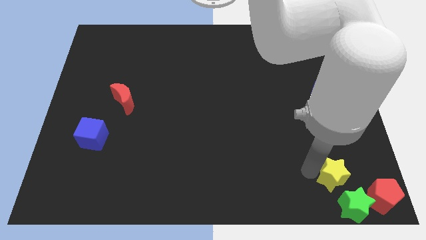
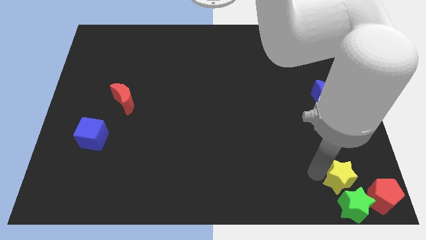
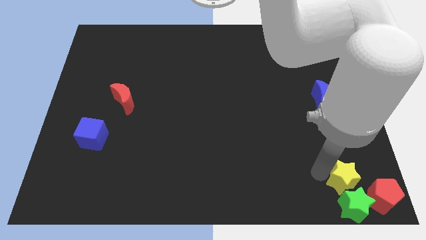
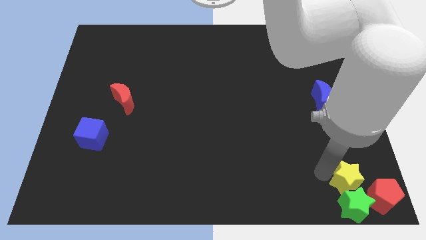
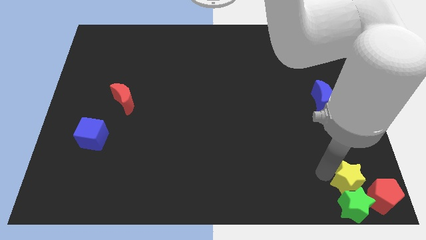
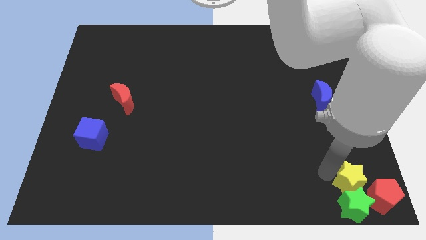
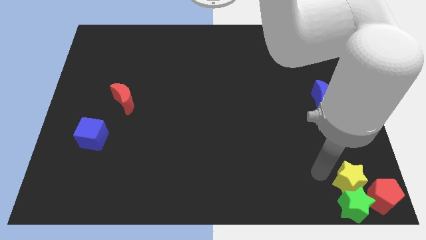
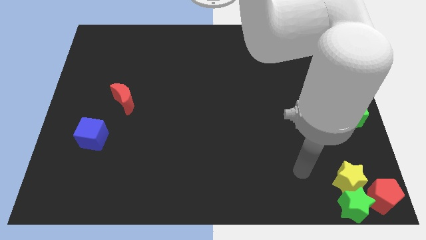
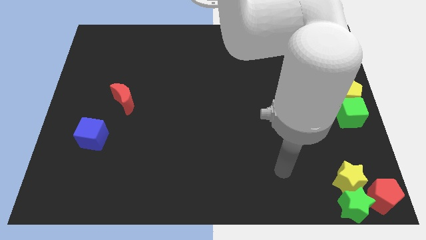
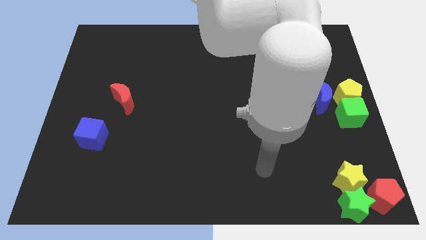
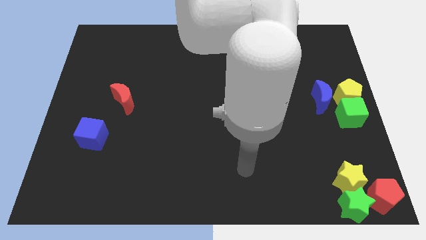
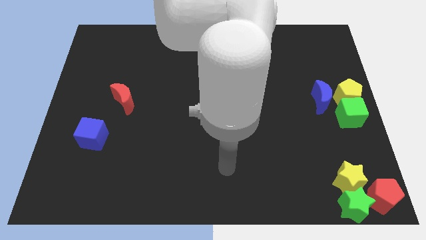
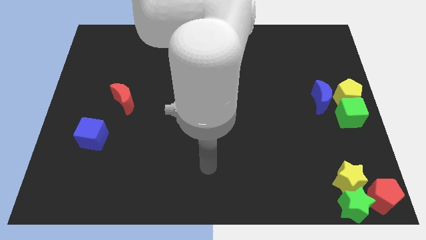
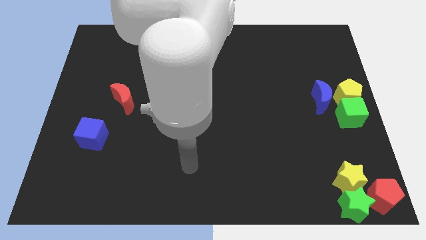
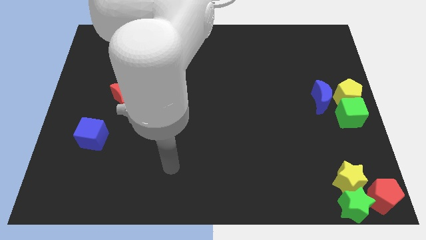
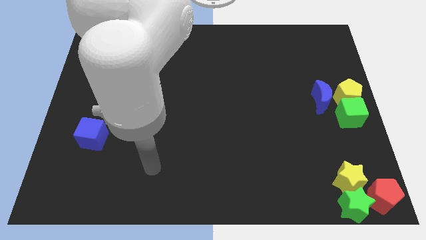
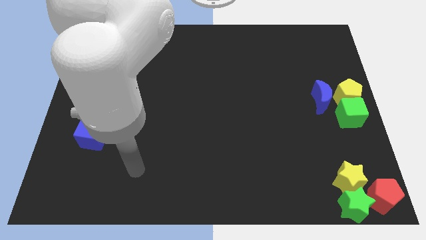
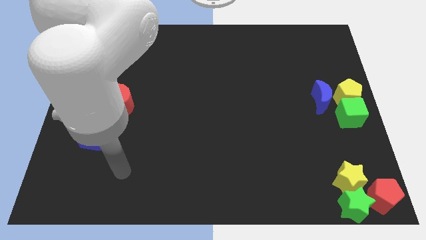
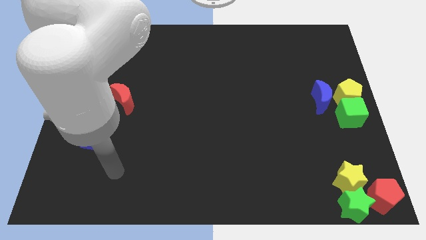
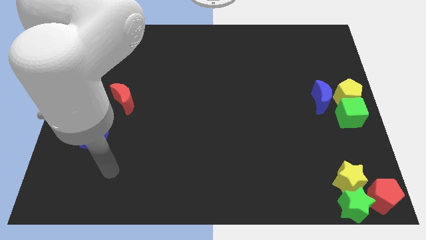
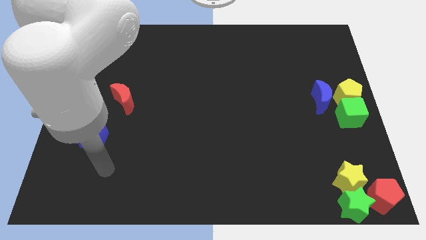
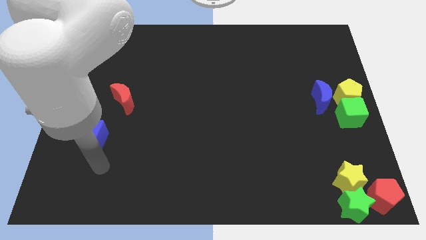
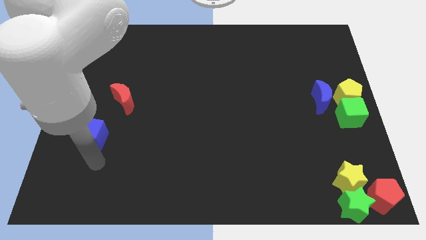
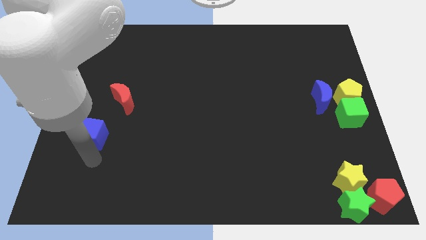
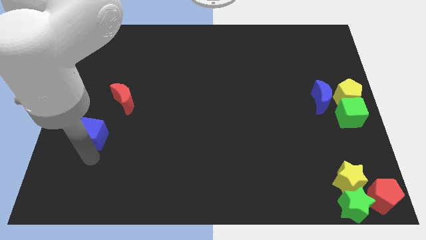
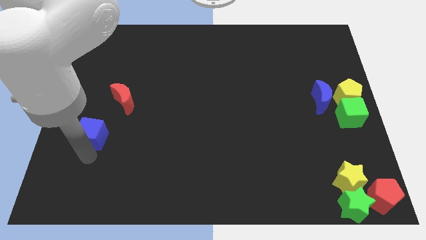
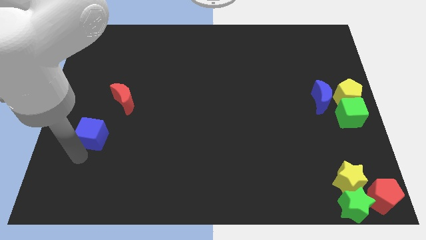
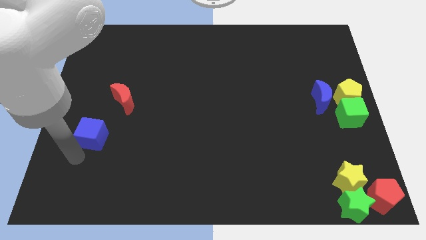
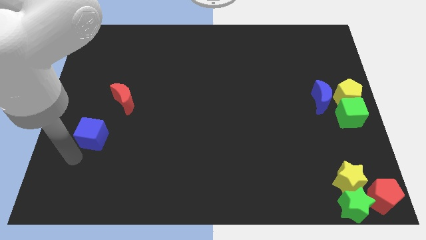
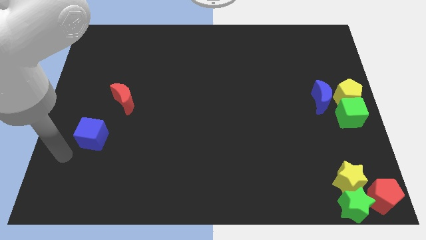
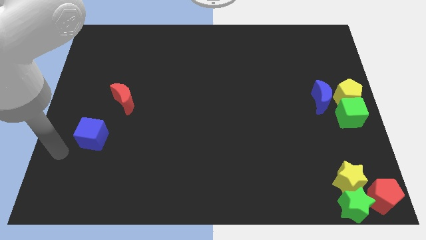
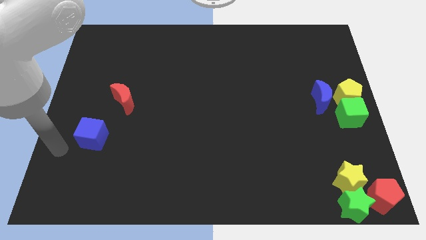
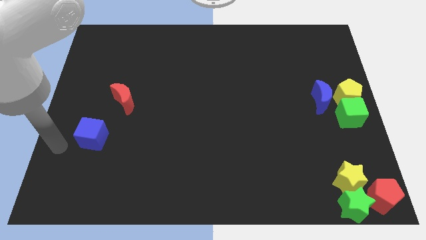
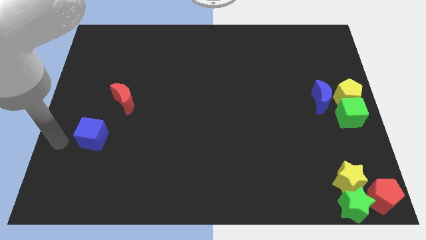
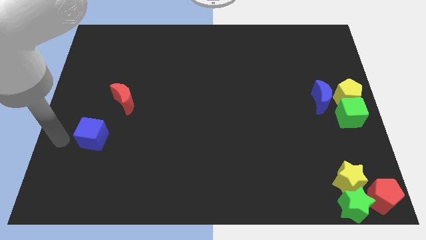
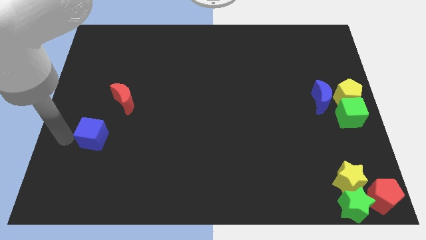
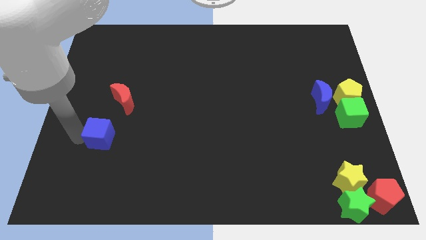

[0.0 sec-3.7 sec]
move the arm towards the blue cube

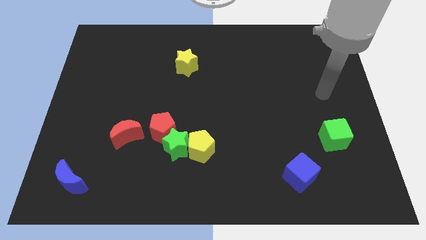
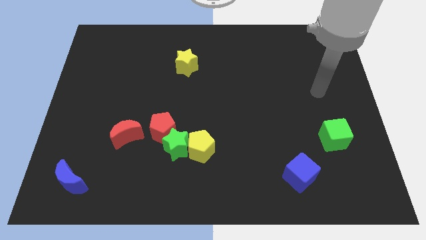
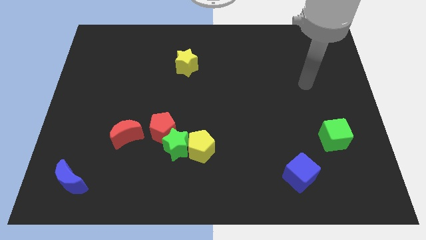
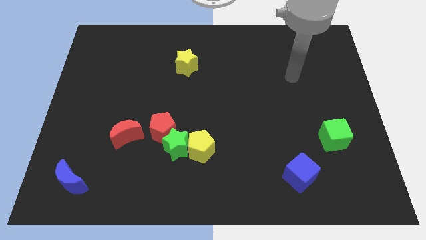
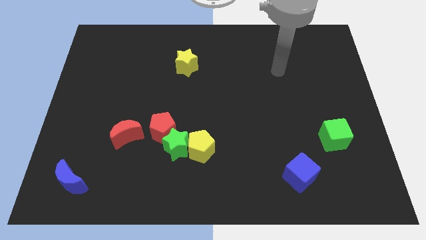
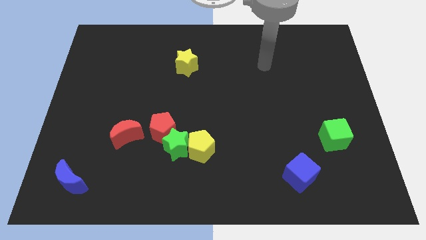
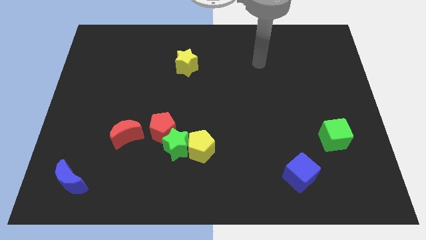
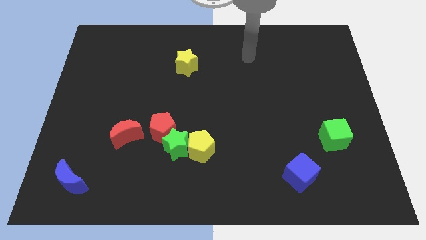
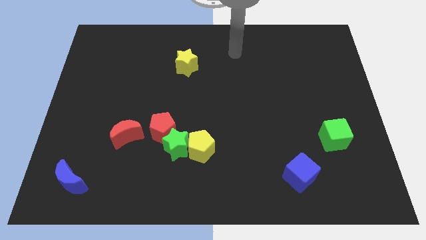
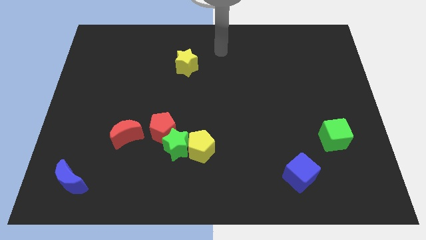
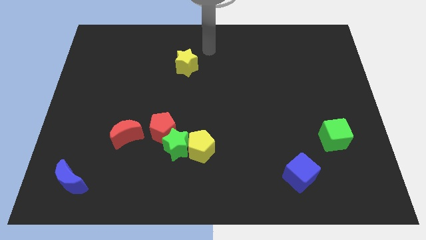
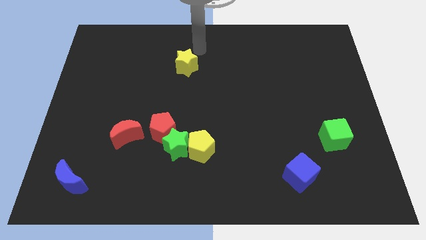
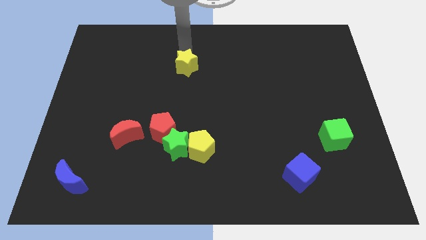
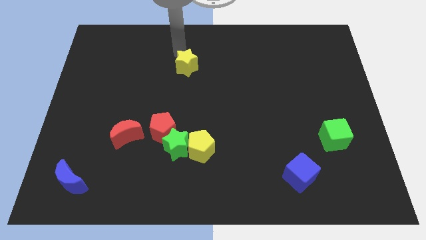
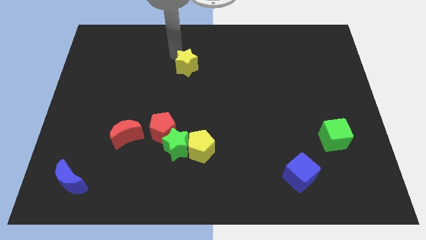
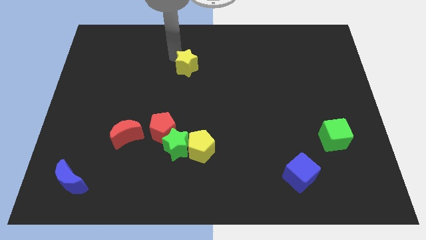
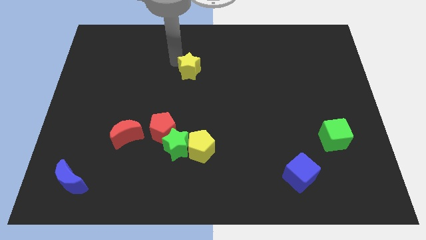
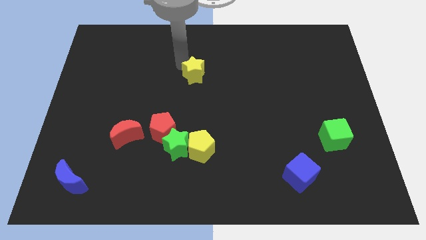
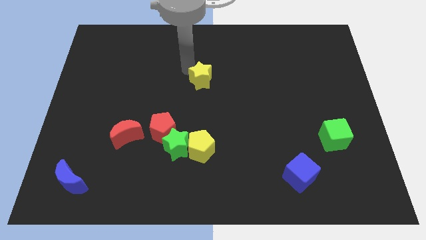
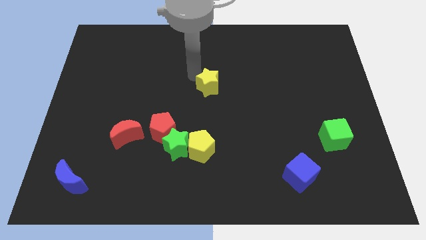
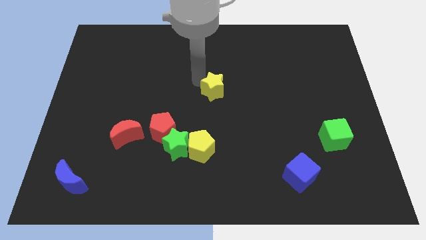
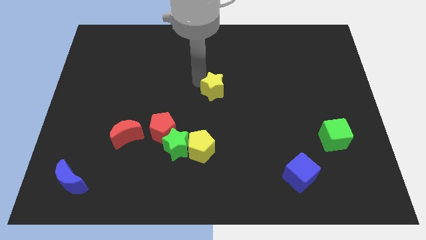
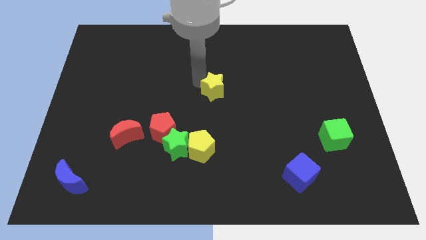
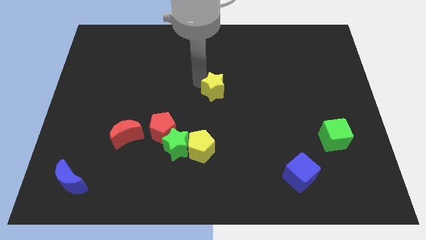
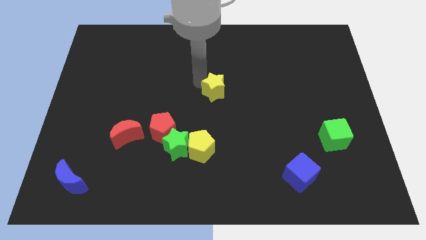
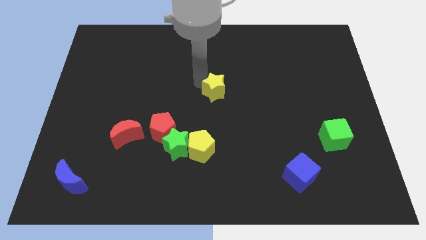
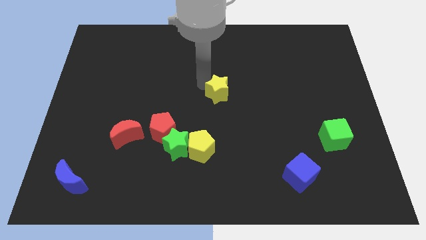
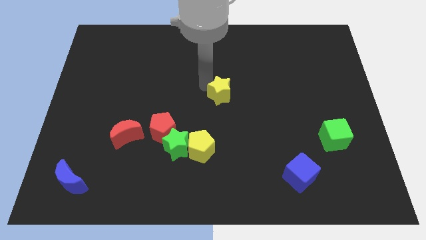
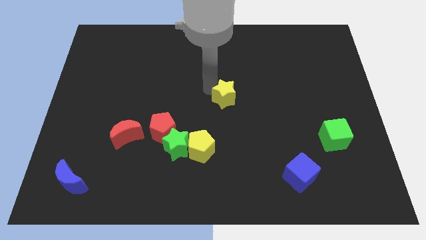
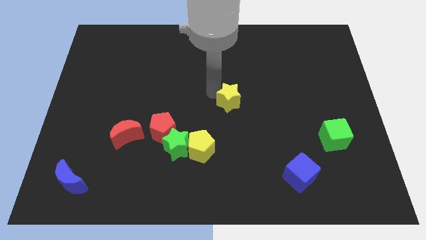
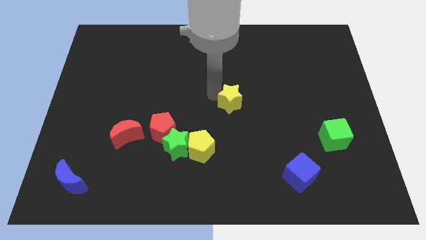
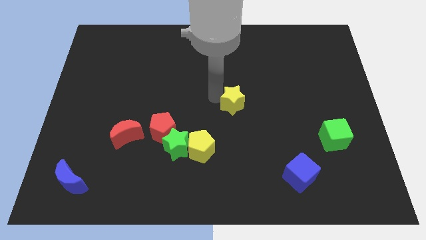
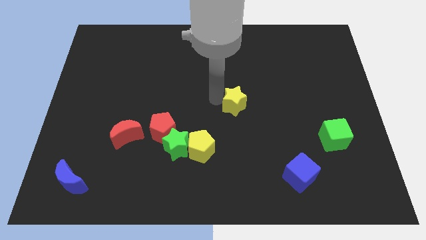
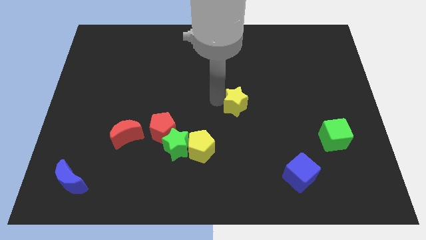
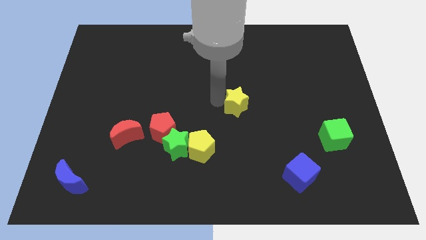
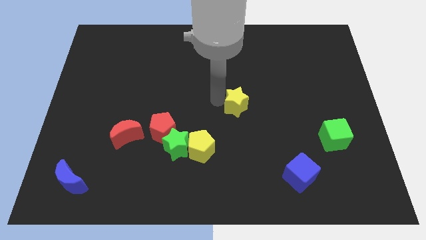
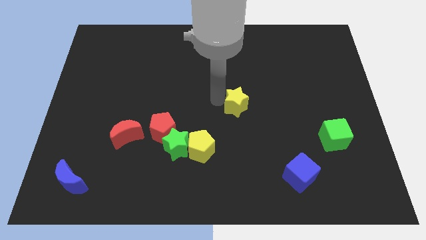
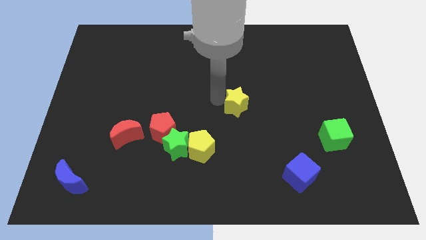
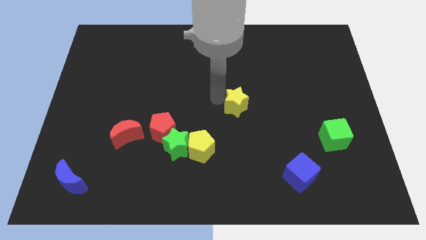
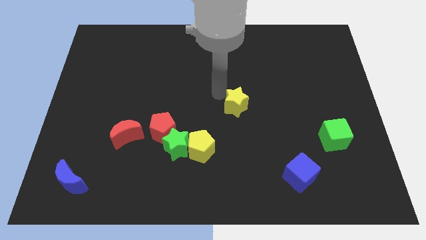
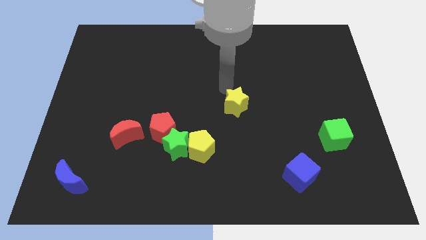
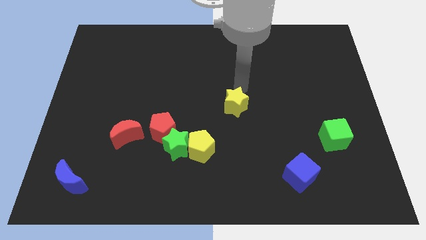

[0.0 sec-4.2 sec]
place the yellow star diagonal to the yellow pentagon

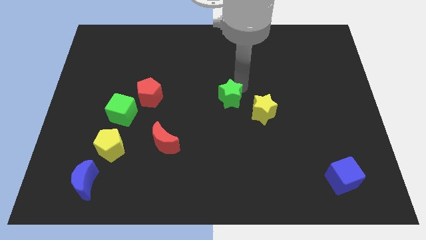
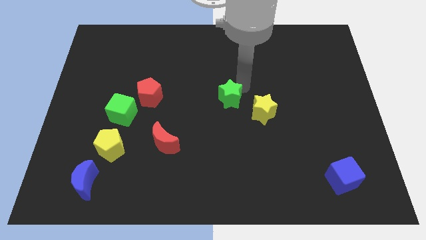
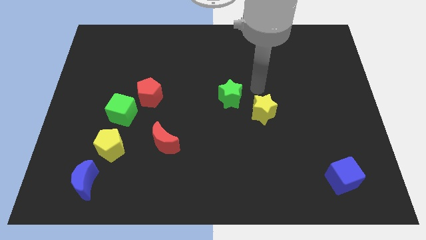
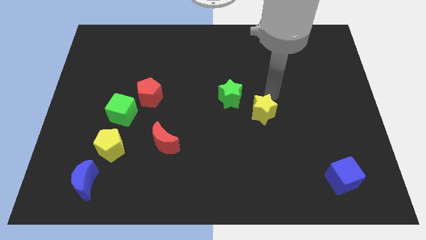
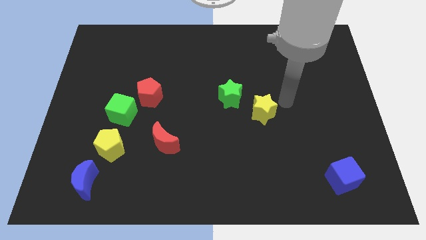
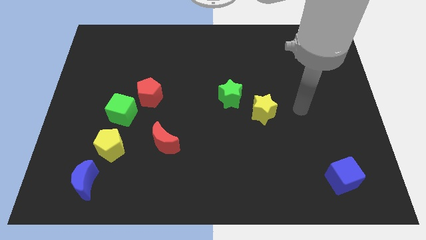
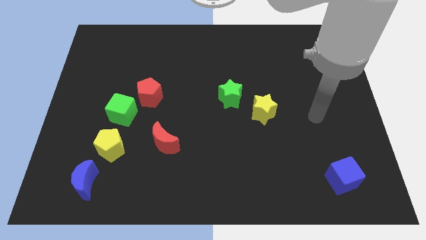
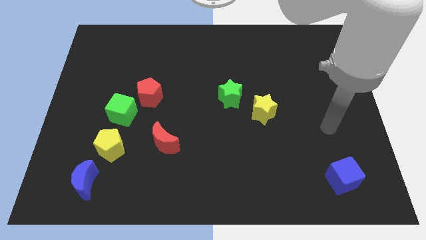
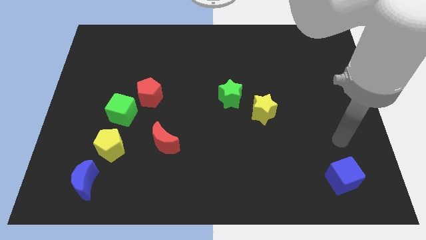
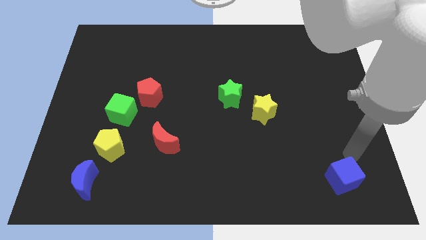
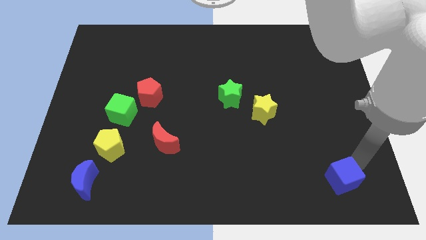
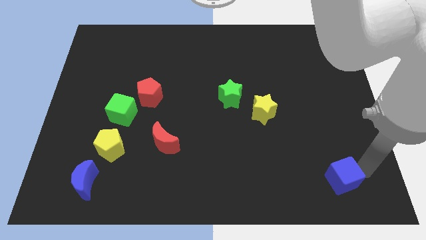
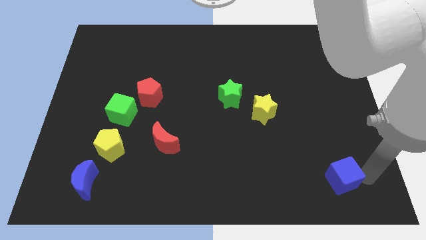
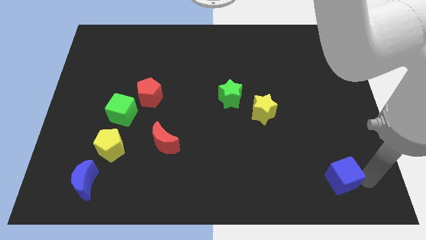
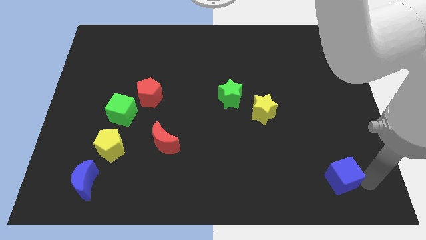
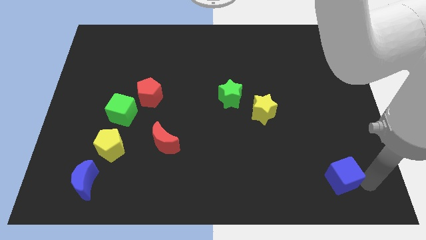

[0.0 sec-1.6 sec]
point your arm at the right of the blue cube
